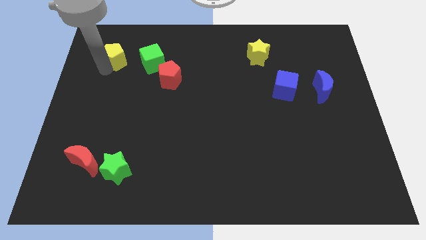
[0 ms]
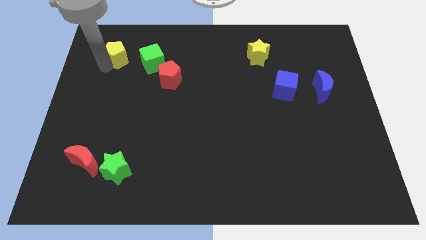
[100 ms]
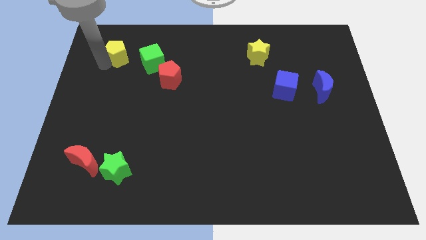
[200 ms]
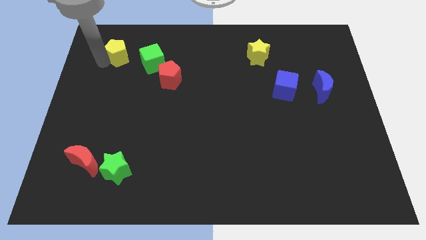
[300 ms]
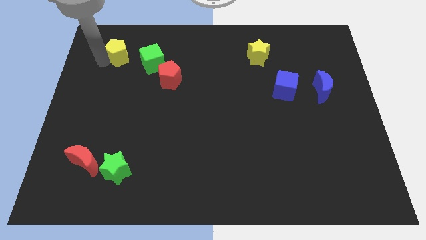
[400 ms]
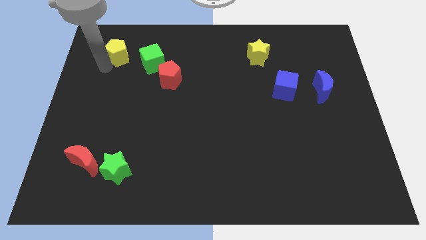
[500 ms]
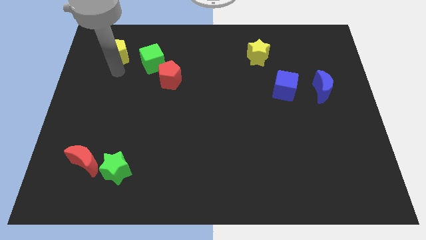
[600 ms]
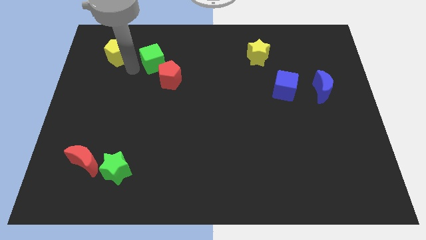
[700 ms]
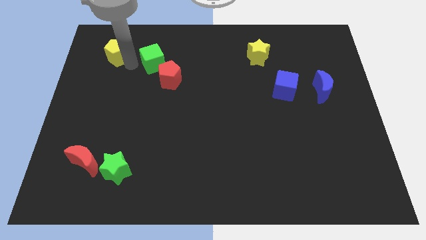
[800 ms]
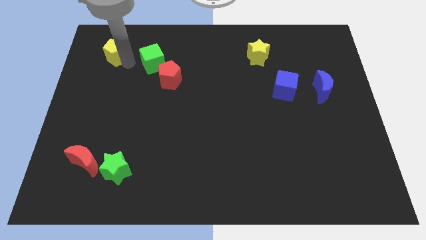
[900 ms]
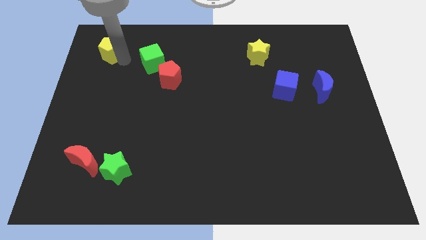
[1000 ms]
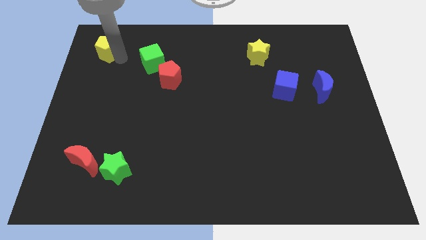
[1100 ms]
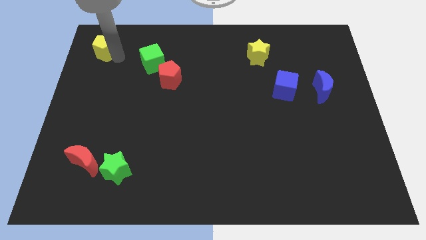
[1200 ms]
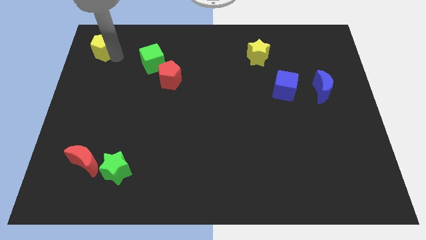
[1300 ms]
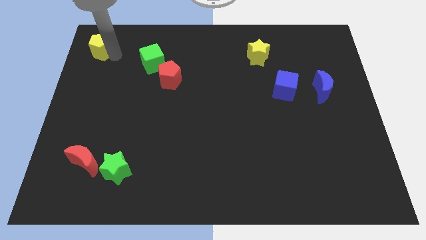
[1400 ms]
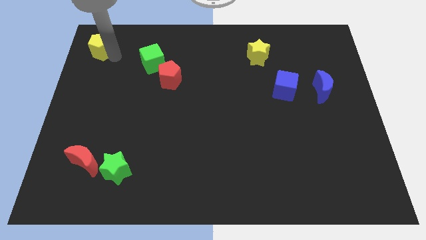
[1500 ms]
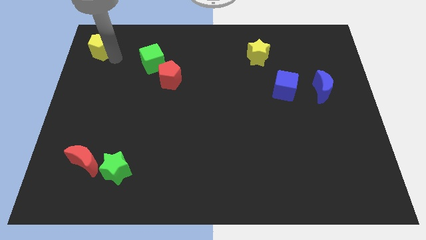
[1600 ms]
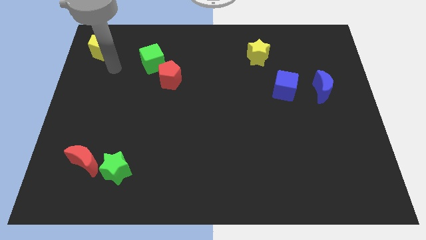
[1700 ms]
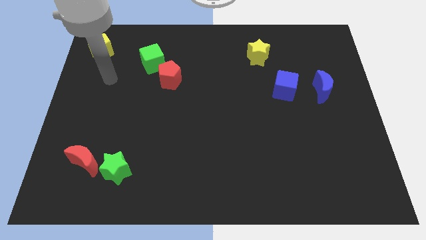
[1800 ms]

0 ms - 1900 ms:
push the yellow pentagon to the top left corner of the board

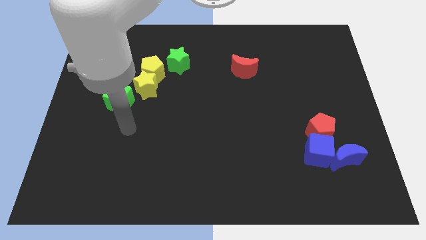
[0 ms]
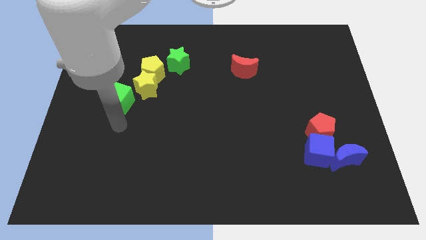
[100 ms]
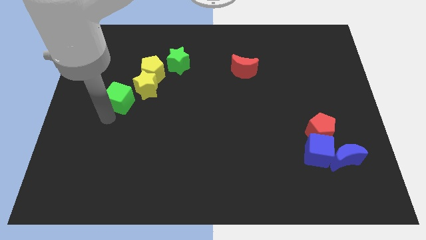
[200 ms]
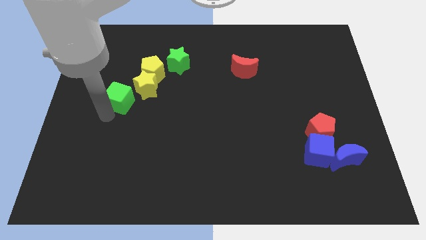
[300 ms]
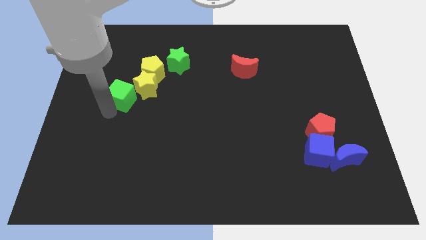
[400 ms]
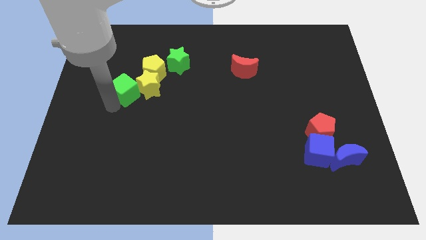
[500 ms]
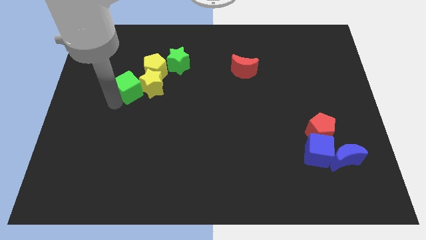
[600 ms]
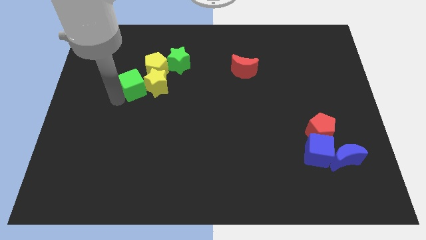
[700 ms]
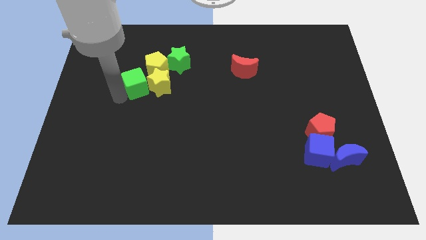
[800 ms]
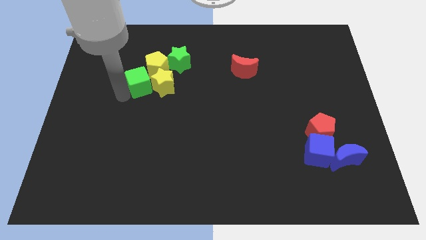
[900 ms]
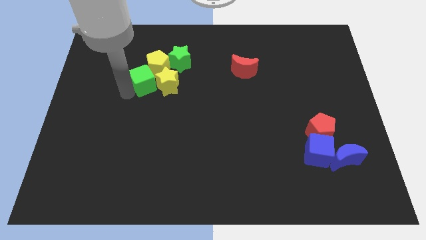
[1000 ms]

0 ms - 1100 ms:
push the yellow blocks with the green cube

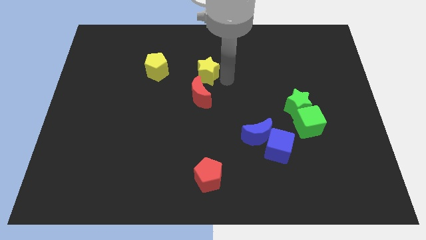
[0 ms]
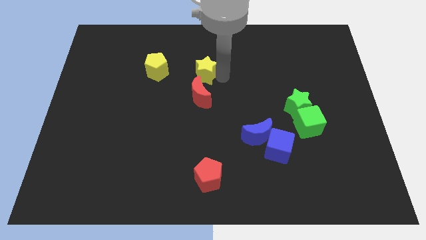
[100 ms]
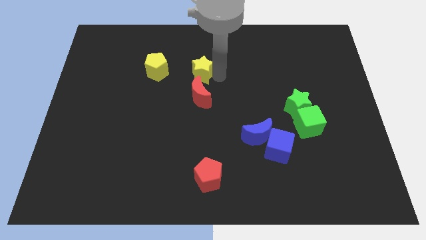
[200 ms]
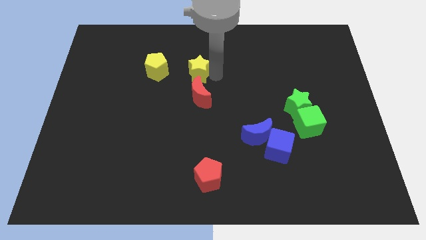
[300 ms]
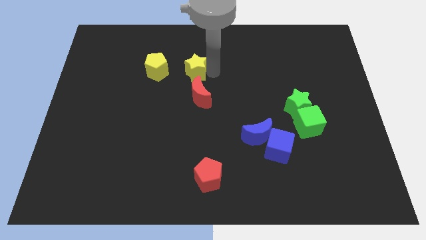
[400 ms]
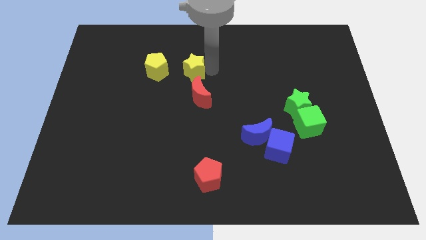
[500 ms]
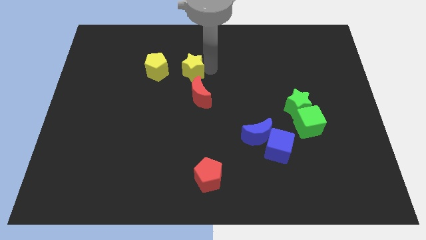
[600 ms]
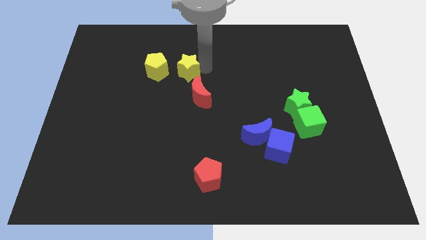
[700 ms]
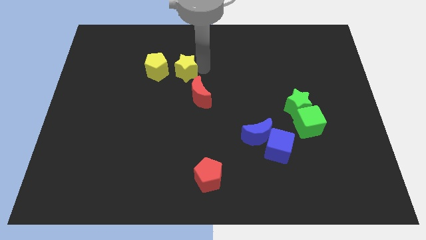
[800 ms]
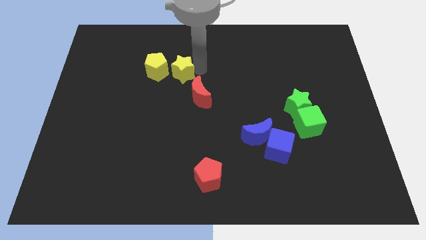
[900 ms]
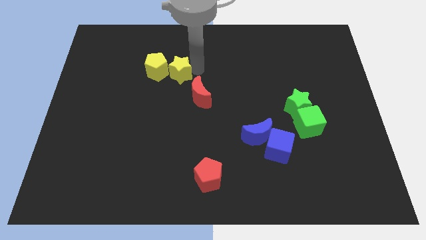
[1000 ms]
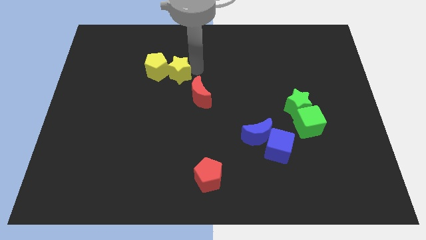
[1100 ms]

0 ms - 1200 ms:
move yellow star into yellow pentagon

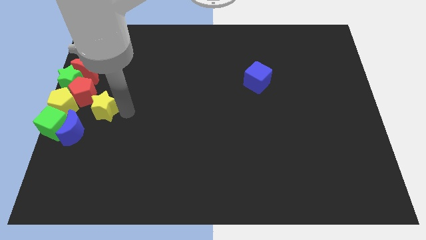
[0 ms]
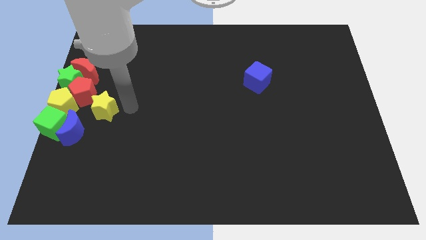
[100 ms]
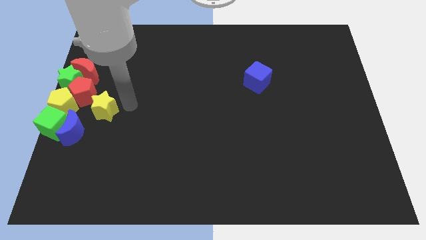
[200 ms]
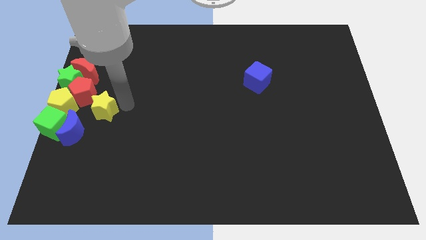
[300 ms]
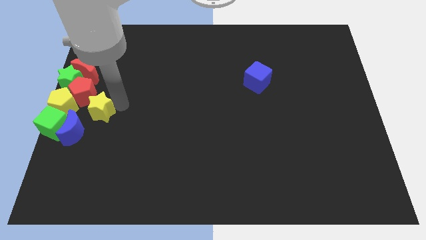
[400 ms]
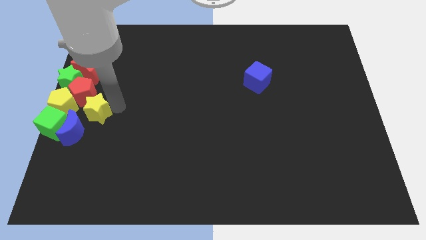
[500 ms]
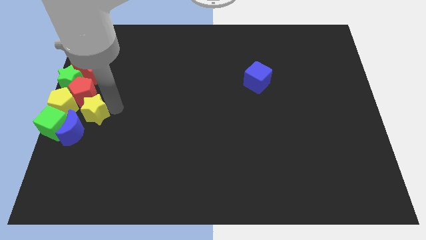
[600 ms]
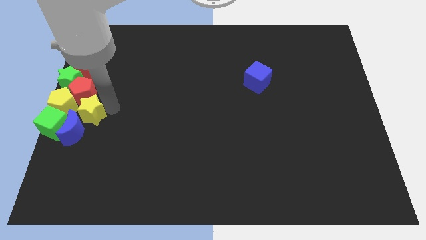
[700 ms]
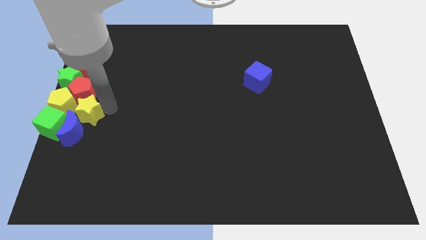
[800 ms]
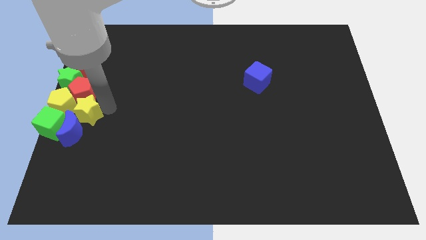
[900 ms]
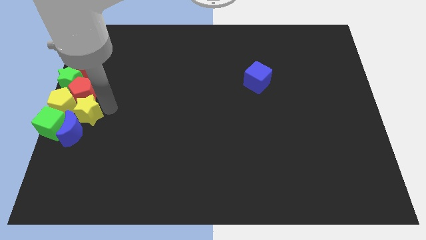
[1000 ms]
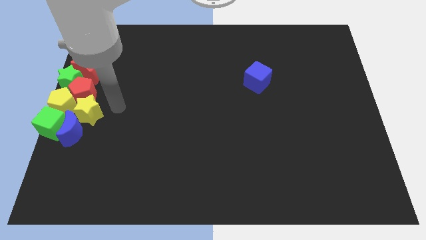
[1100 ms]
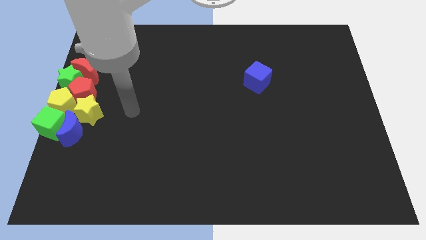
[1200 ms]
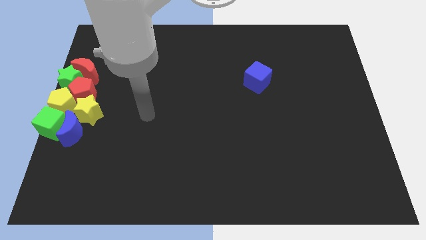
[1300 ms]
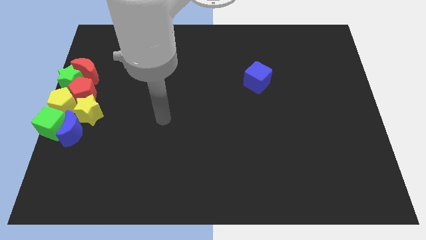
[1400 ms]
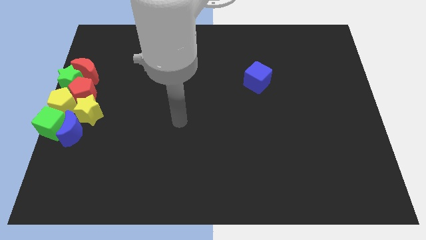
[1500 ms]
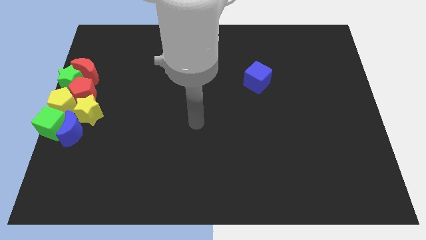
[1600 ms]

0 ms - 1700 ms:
push the yellow star into the blue crescent

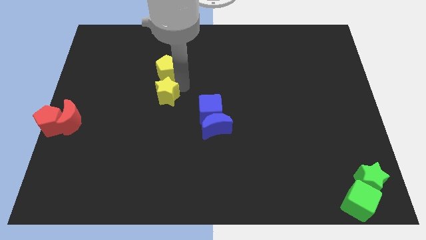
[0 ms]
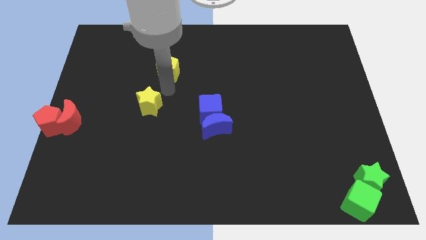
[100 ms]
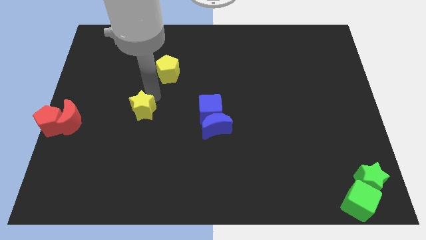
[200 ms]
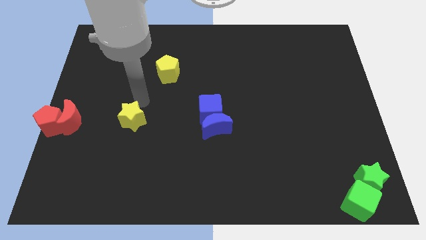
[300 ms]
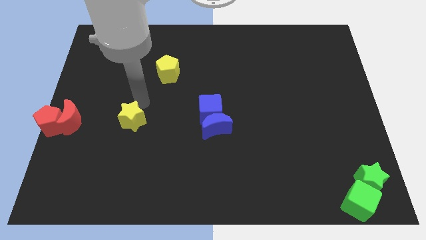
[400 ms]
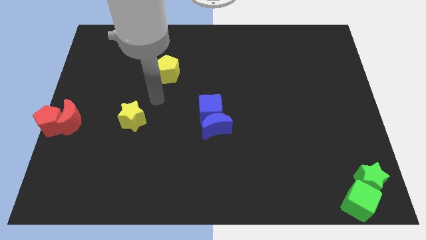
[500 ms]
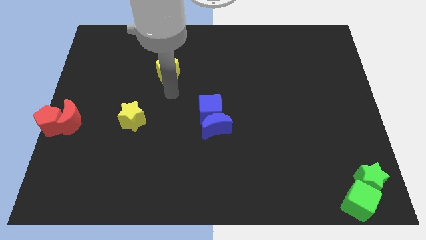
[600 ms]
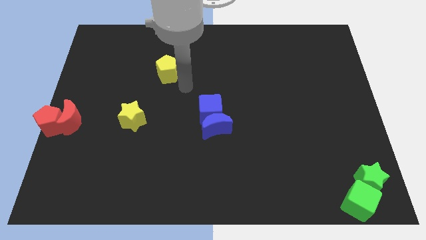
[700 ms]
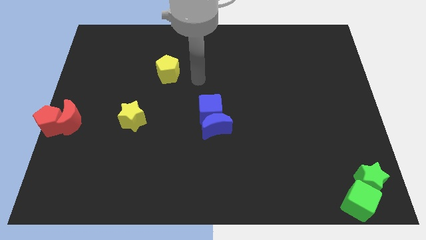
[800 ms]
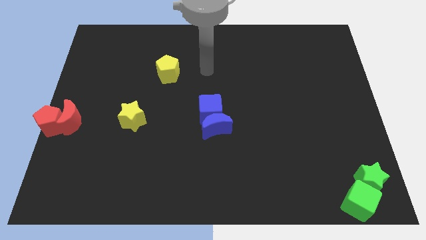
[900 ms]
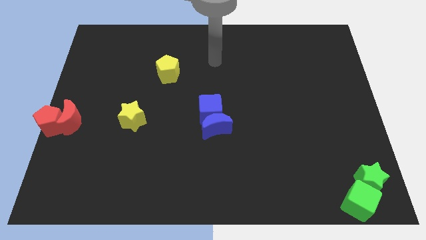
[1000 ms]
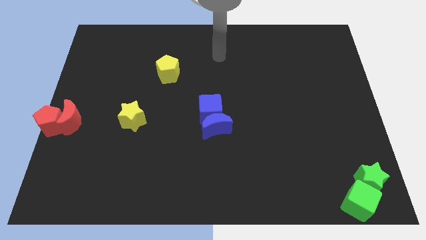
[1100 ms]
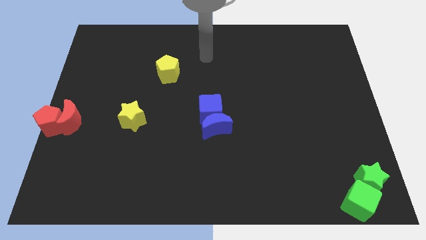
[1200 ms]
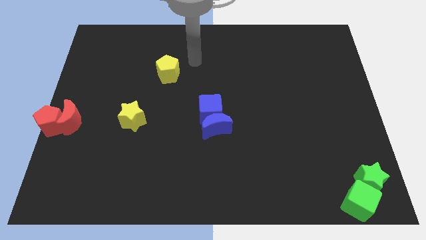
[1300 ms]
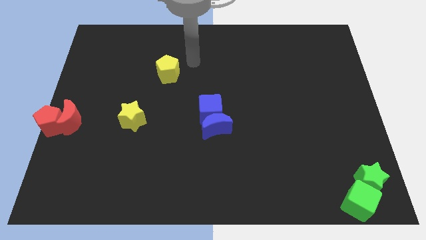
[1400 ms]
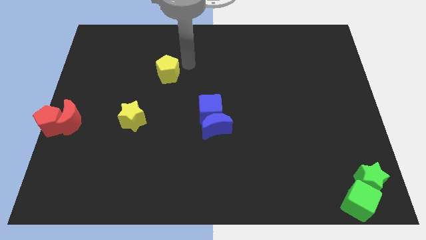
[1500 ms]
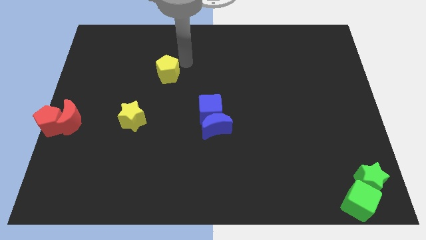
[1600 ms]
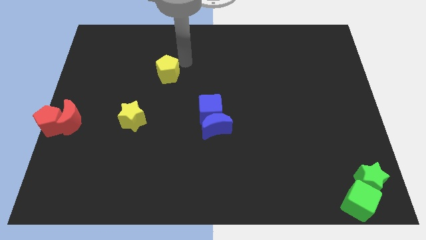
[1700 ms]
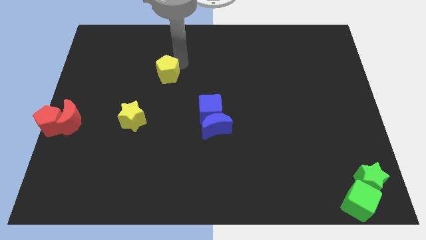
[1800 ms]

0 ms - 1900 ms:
place the yellow star parallel to the red crescent at the right side

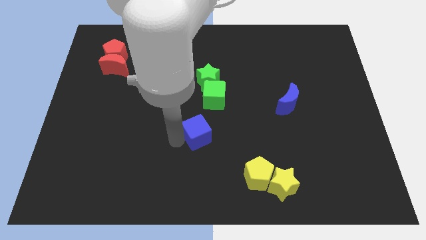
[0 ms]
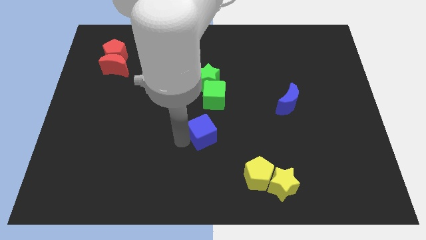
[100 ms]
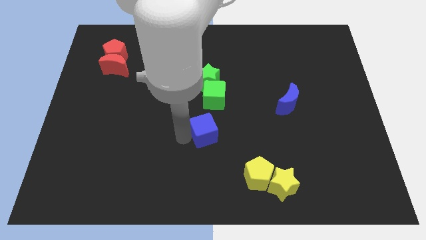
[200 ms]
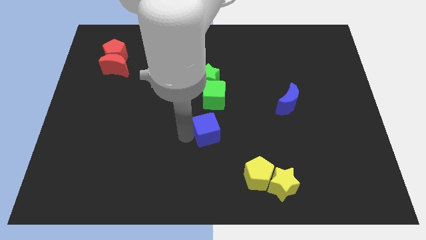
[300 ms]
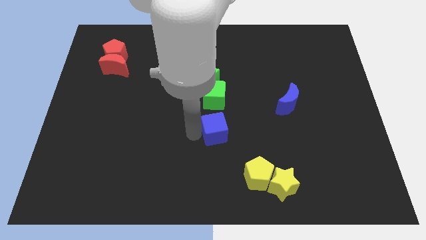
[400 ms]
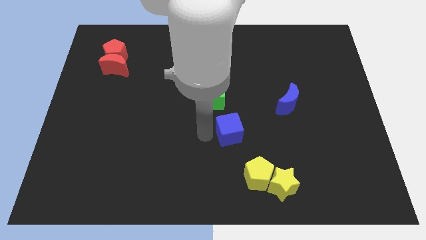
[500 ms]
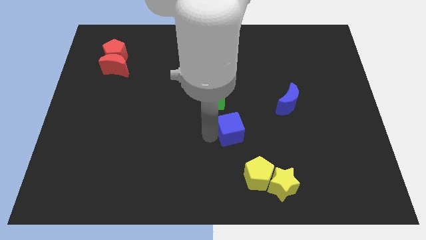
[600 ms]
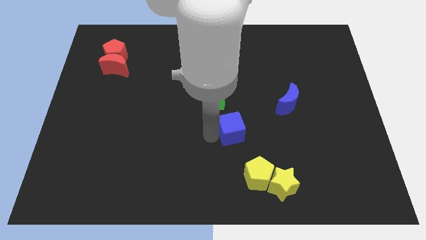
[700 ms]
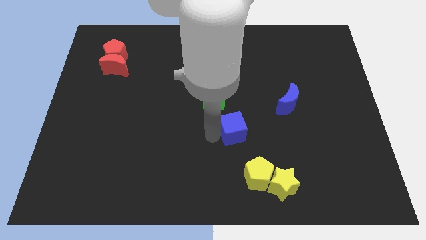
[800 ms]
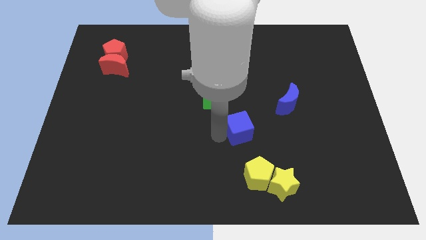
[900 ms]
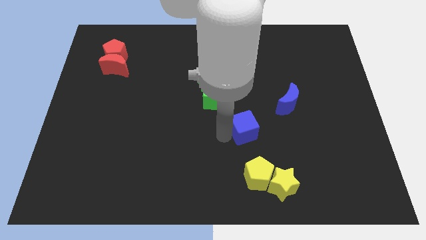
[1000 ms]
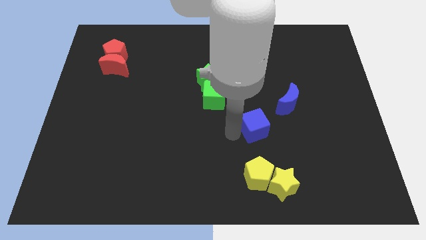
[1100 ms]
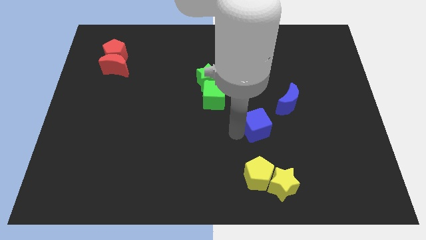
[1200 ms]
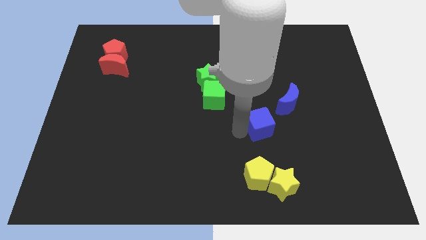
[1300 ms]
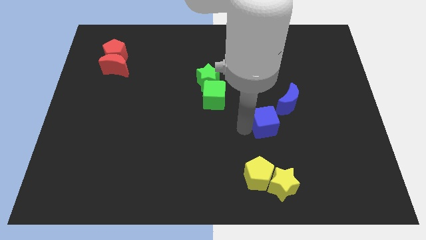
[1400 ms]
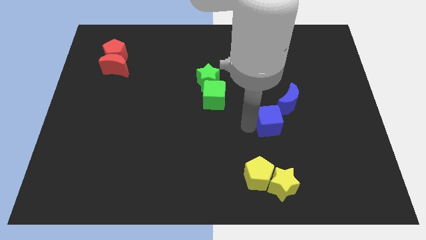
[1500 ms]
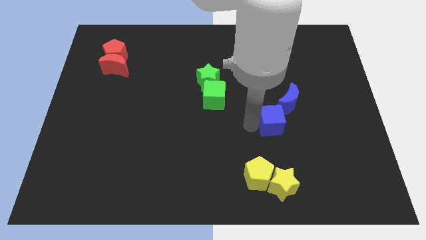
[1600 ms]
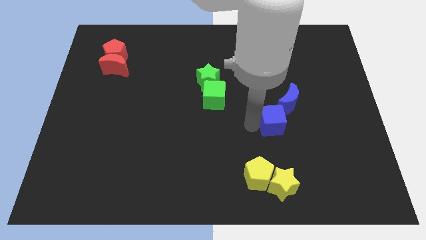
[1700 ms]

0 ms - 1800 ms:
move blue cube close to the blue moon
